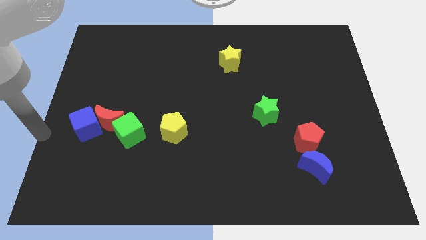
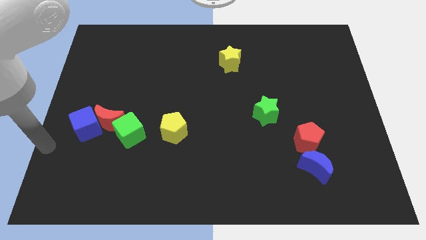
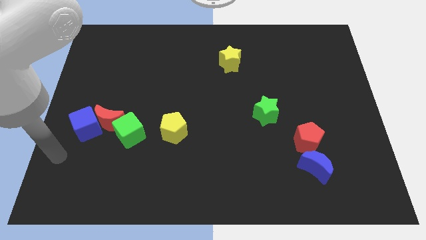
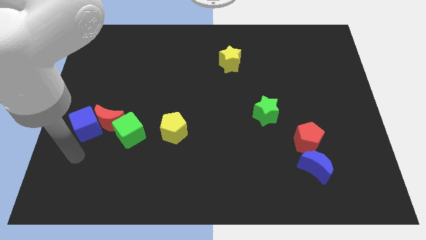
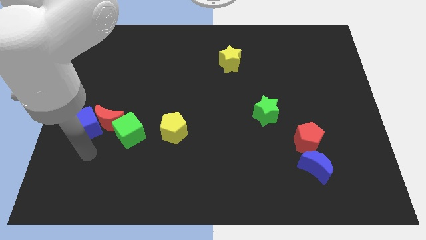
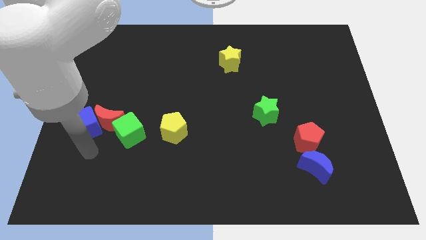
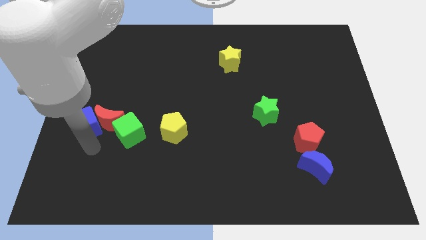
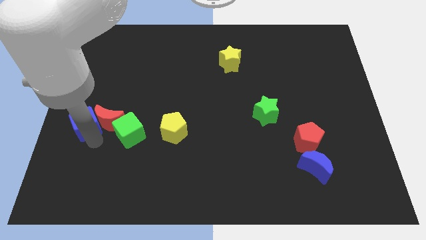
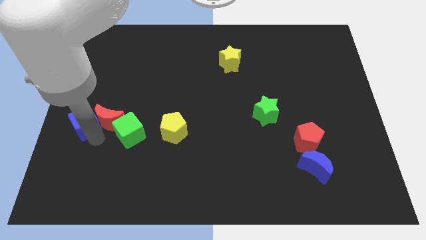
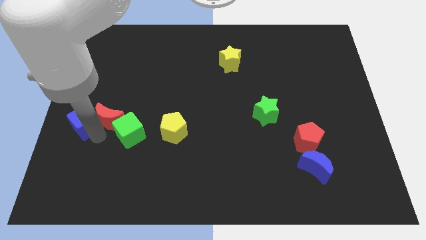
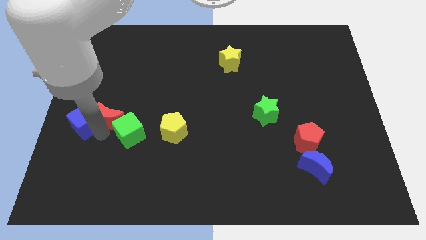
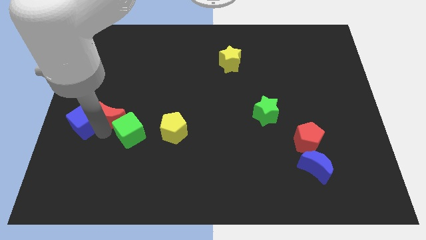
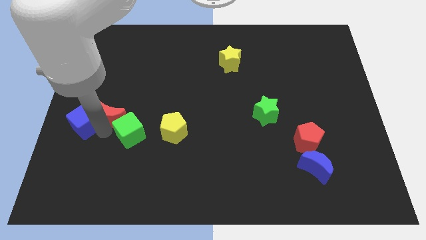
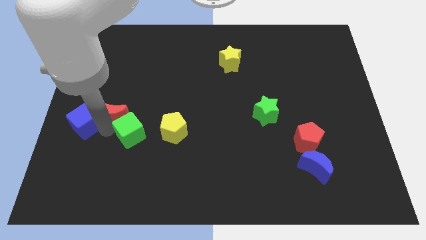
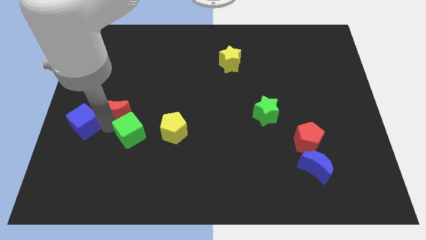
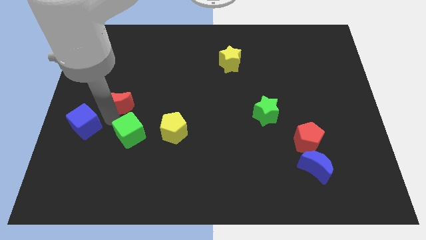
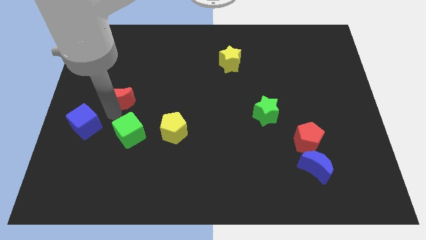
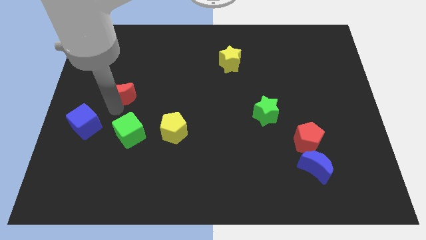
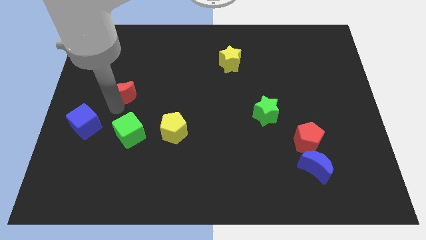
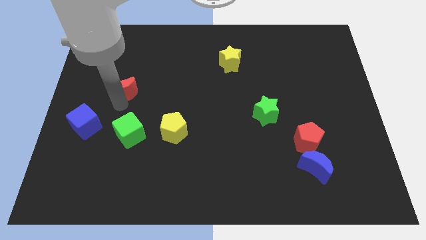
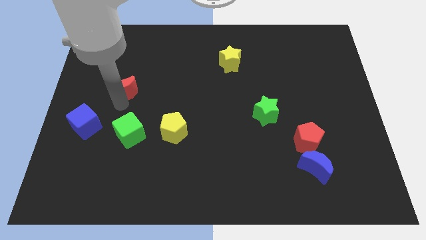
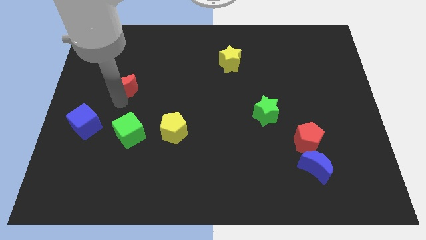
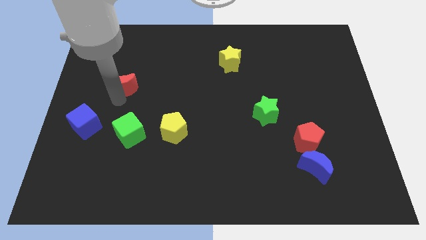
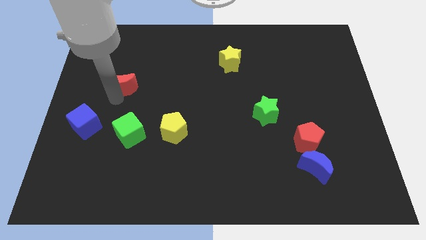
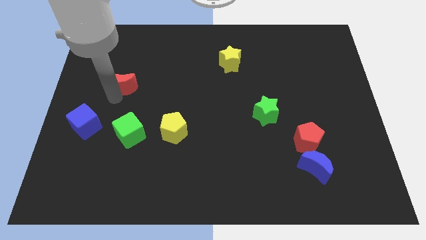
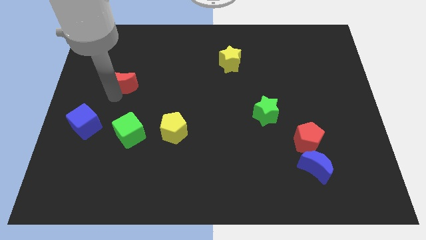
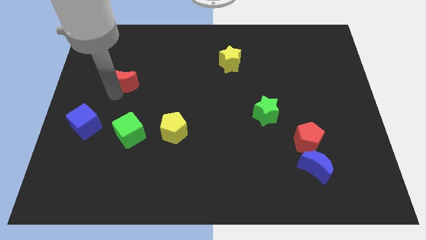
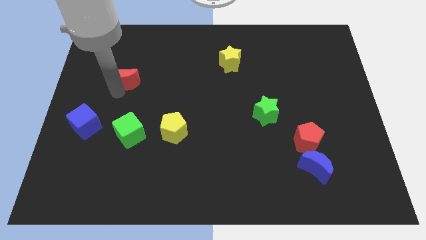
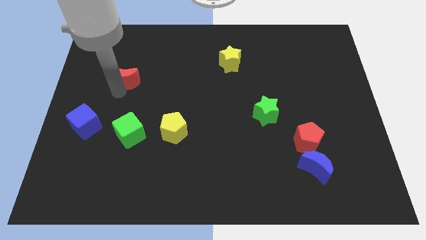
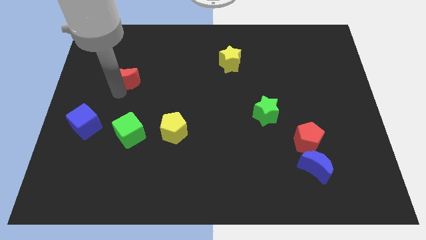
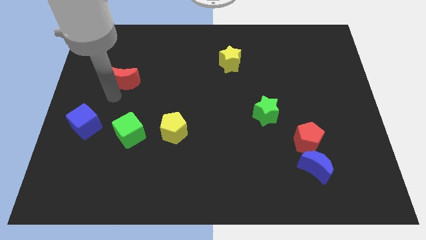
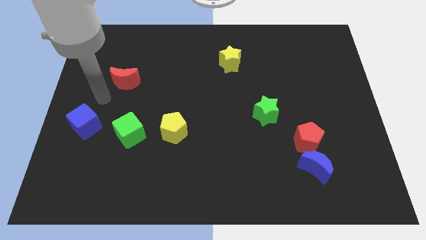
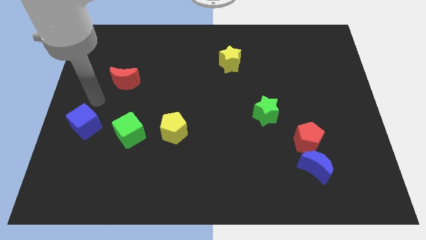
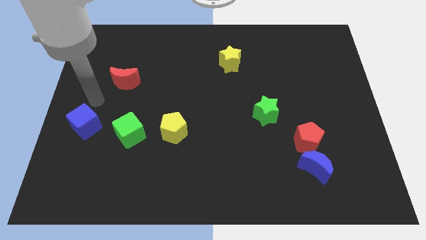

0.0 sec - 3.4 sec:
push the red moon away from the blue cube and green cube

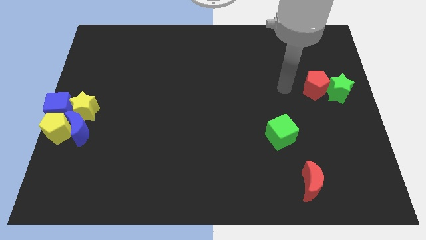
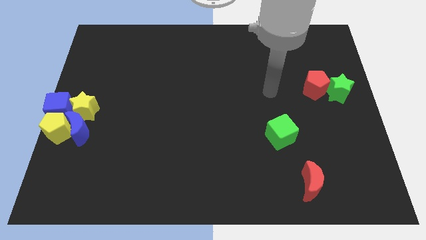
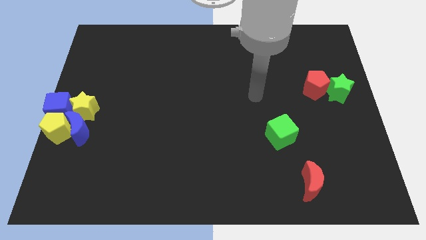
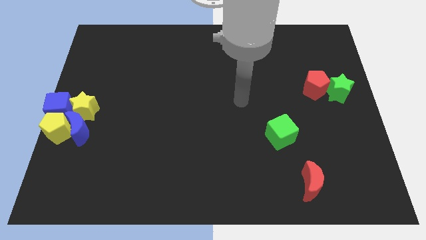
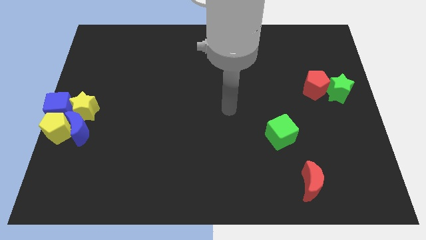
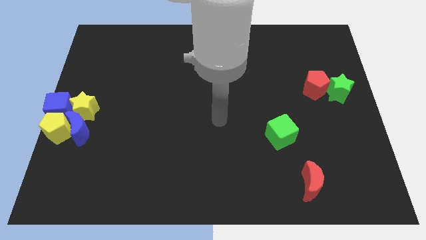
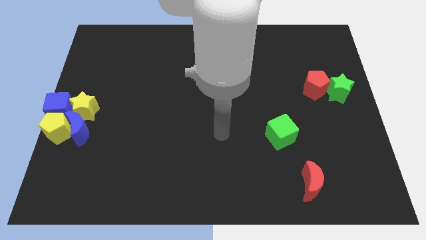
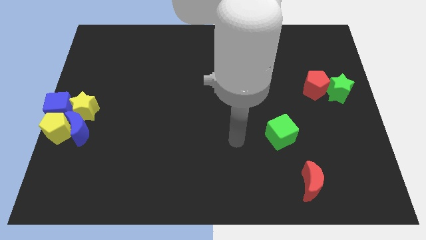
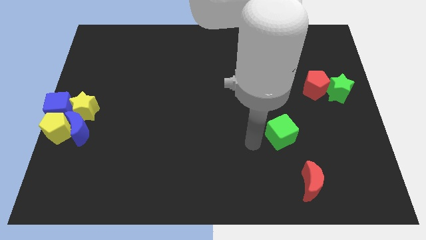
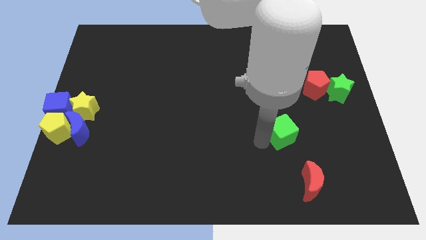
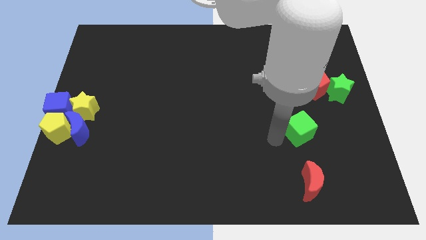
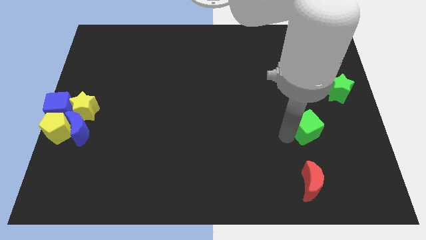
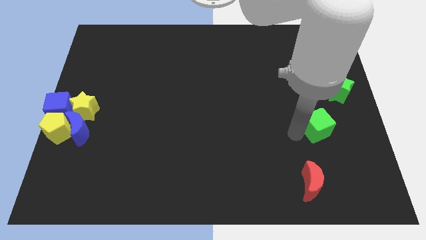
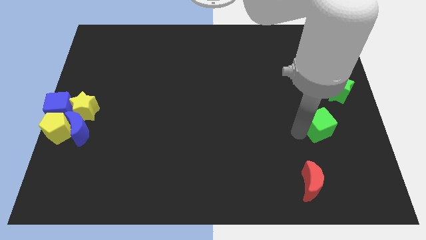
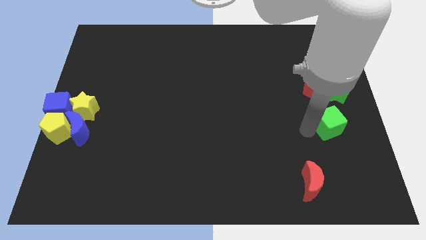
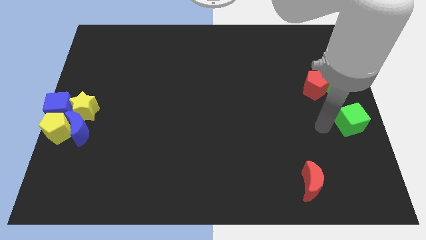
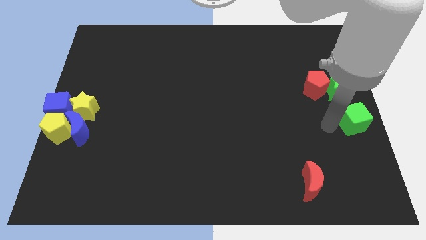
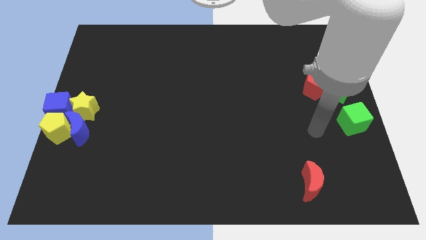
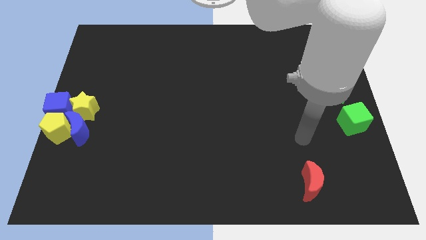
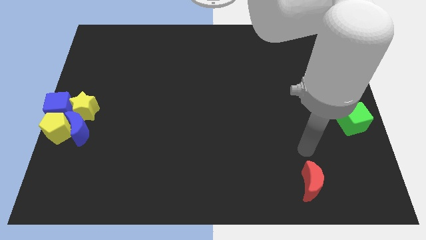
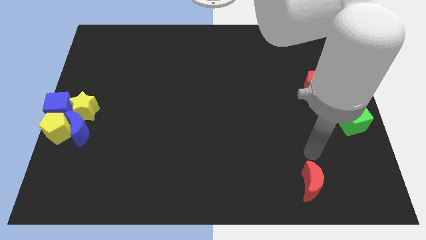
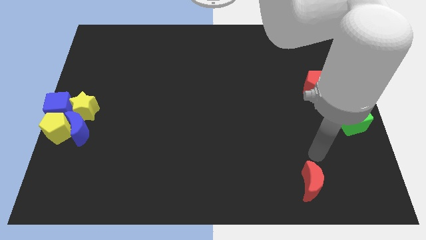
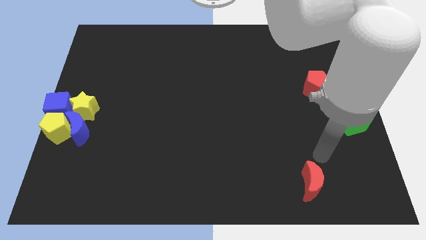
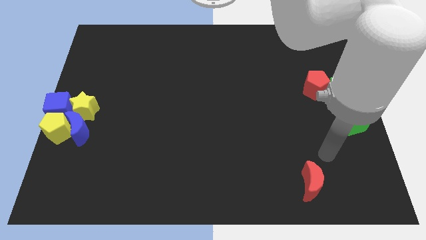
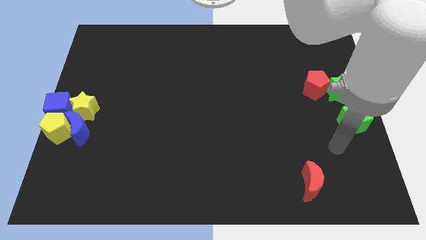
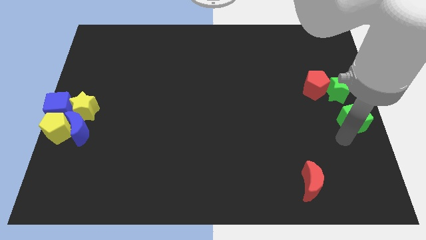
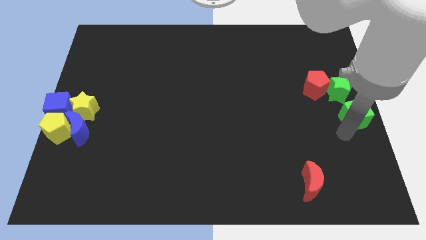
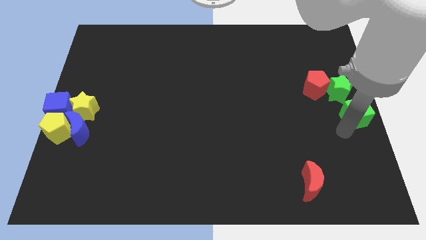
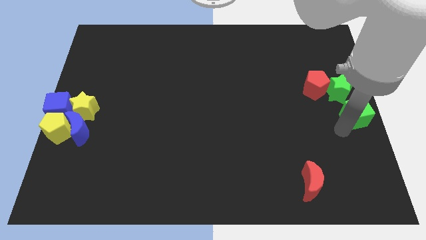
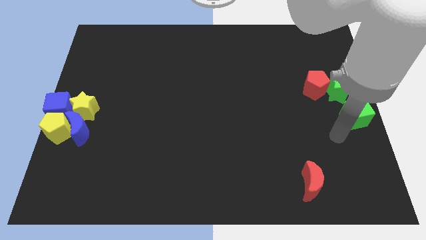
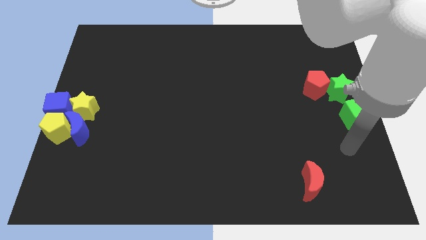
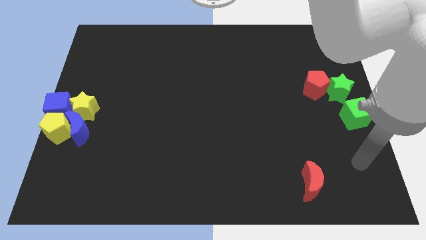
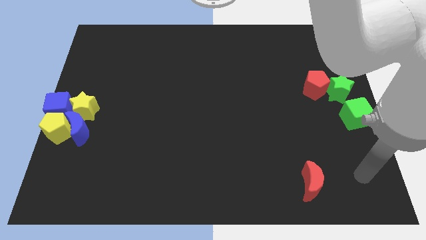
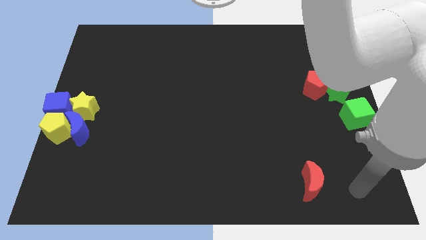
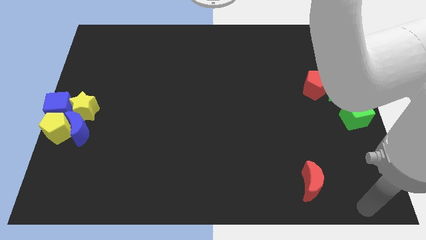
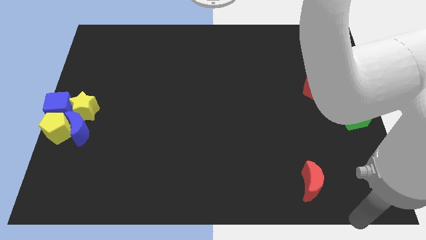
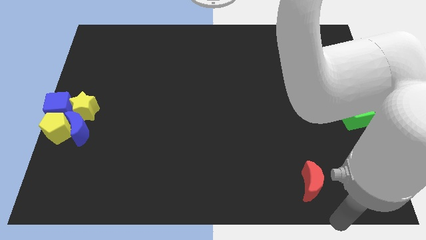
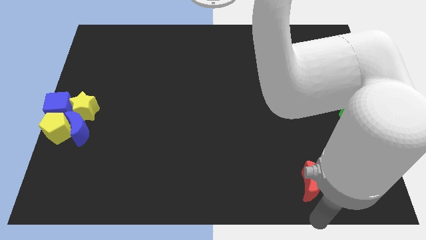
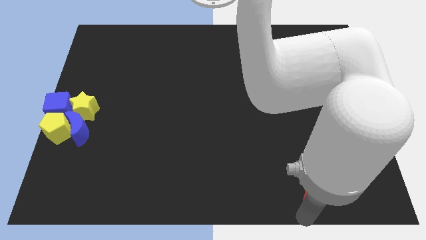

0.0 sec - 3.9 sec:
place the green cube below the green star

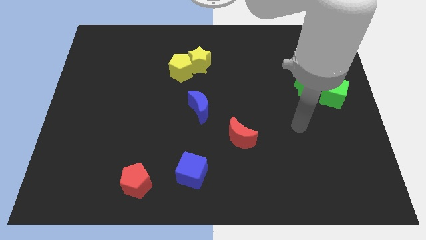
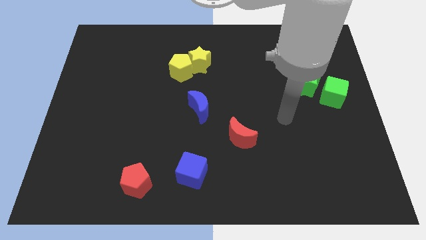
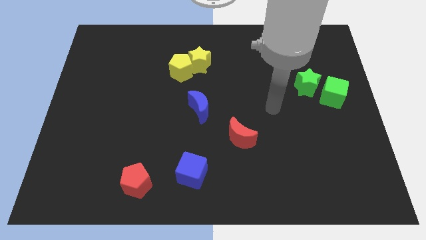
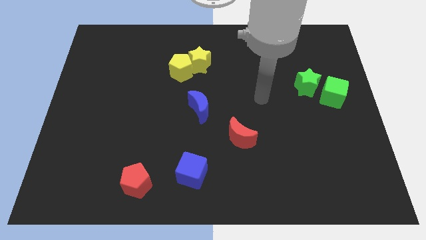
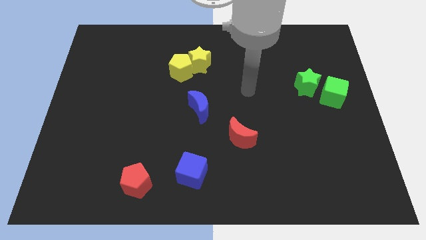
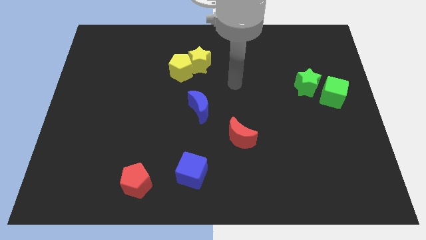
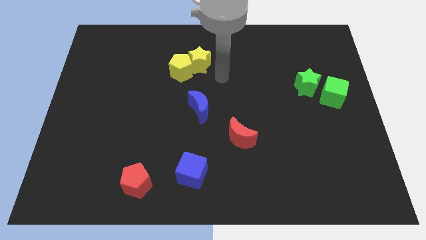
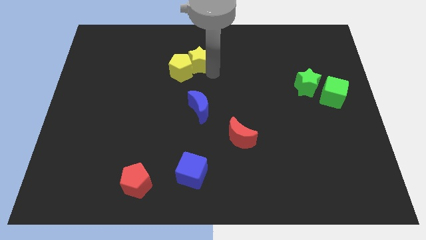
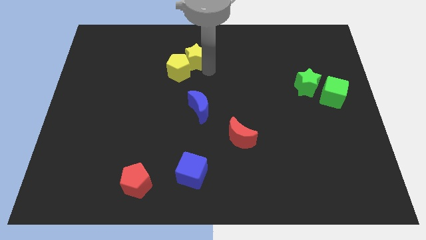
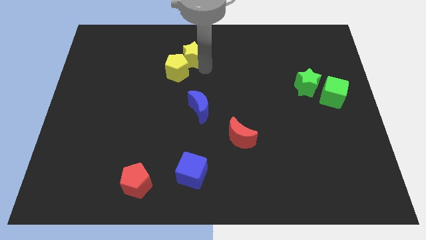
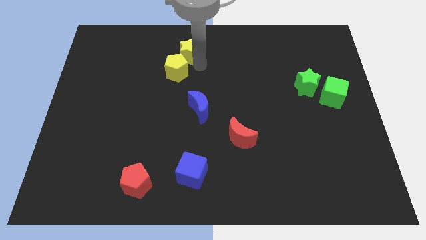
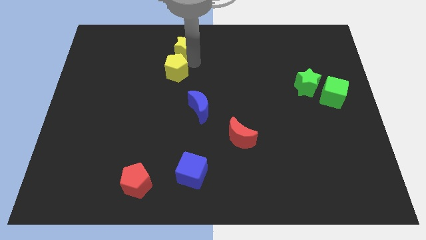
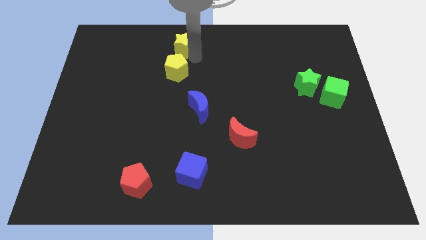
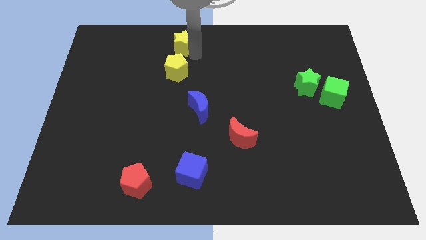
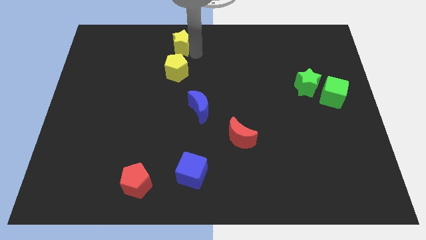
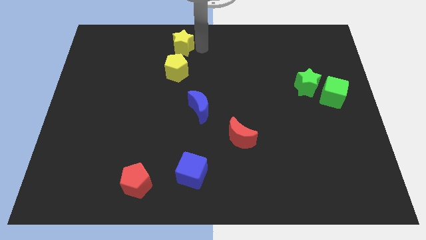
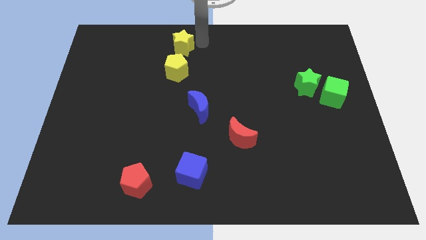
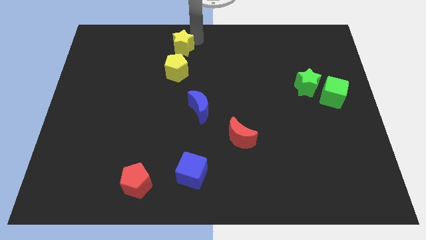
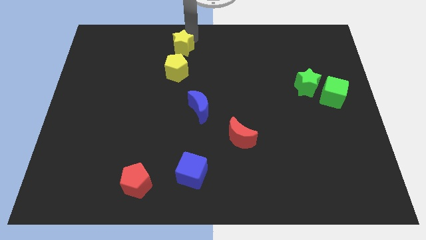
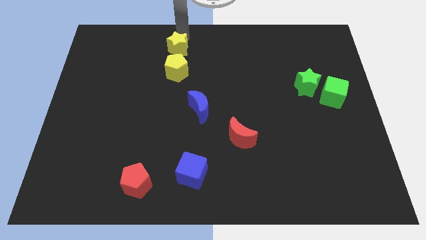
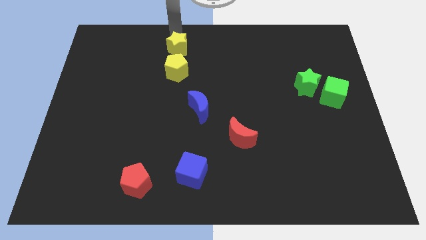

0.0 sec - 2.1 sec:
place the yellow star to the top side of the yellow pentagon
